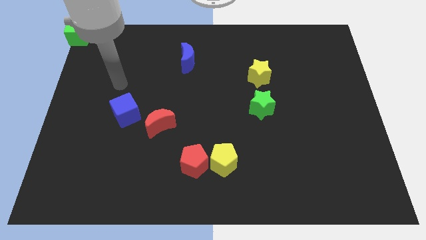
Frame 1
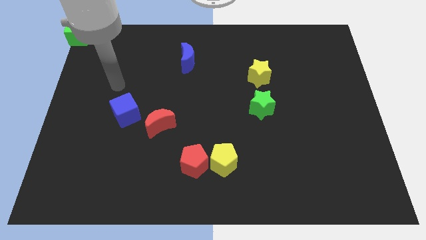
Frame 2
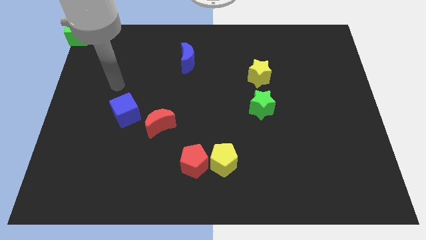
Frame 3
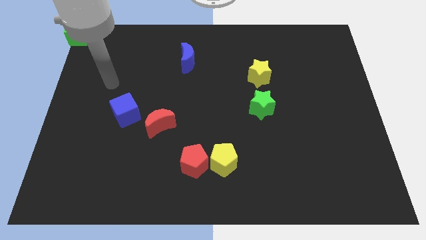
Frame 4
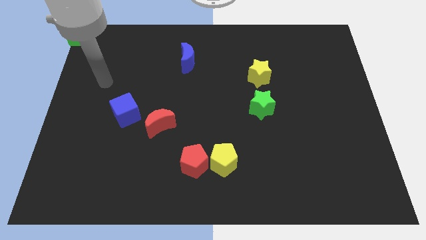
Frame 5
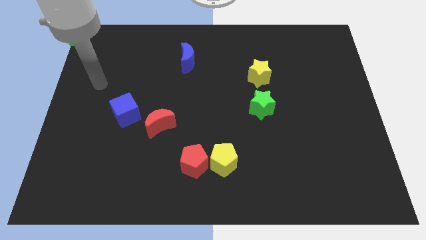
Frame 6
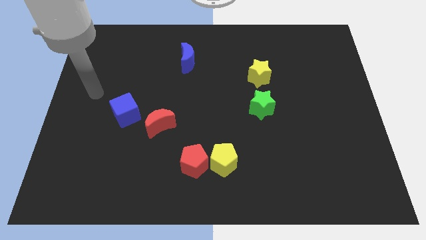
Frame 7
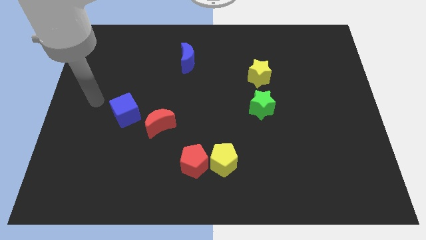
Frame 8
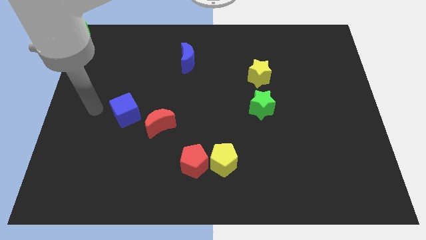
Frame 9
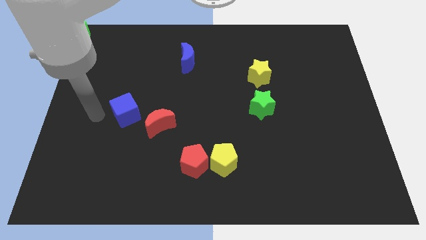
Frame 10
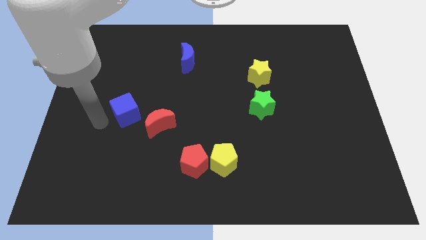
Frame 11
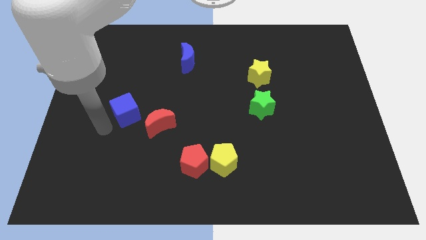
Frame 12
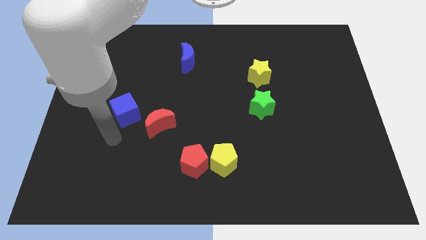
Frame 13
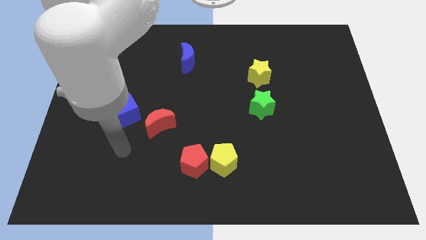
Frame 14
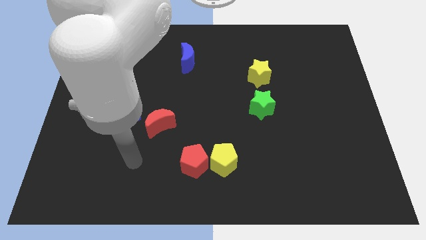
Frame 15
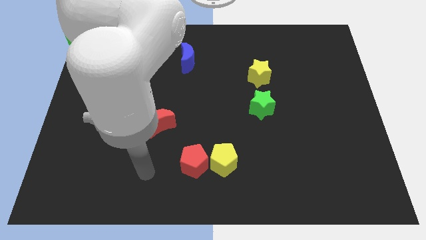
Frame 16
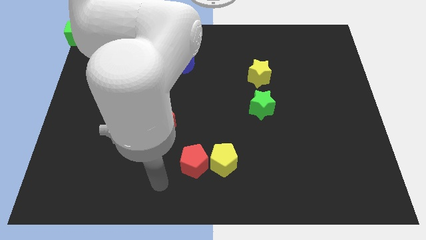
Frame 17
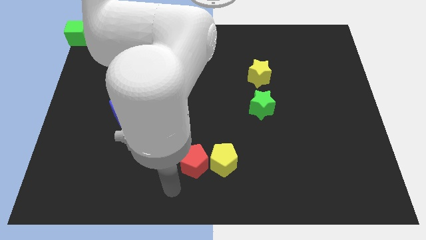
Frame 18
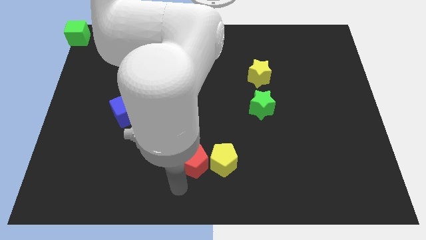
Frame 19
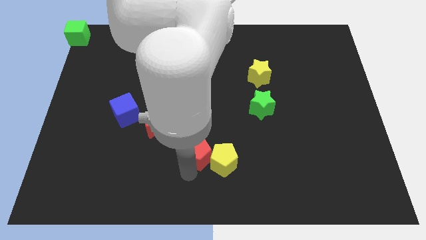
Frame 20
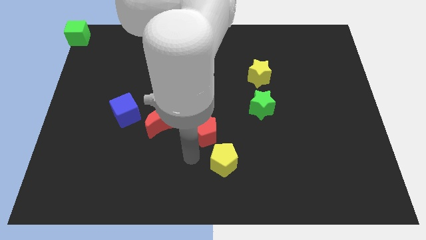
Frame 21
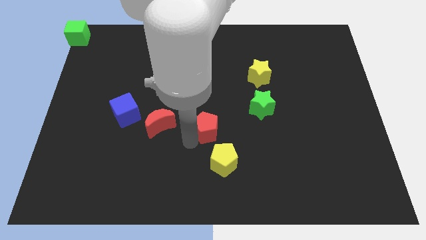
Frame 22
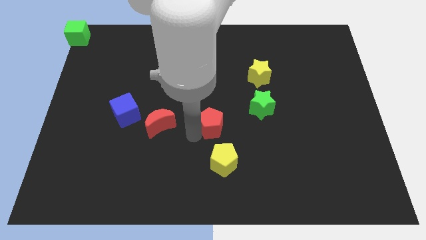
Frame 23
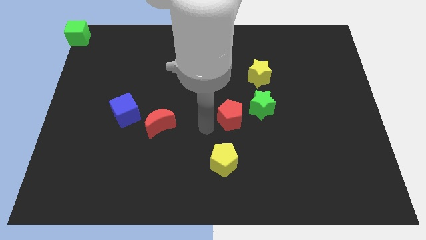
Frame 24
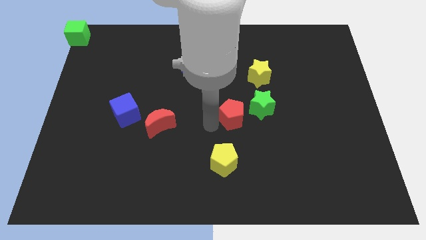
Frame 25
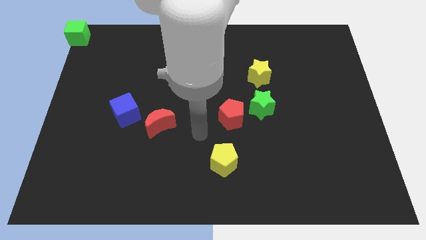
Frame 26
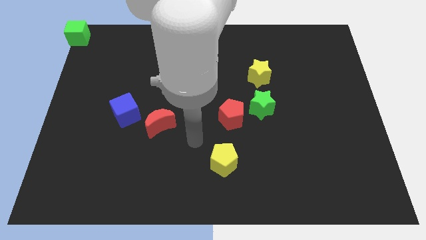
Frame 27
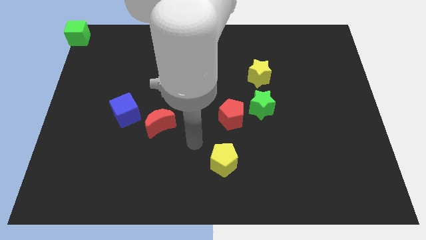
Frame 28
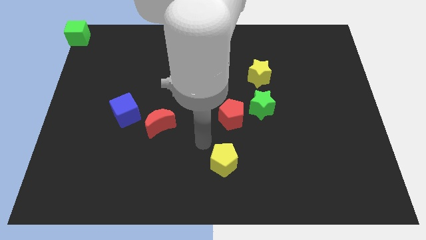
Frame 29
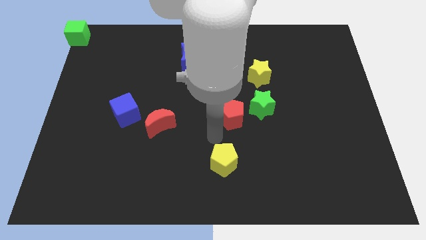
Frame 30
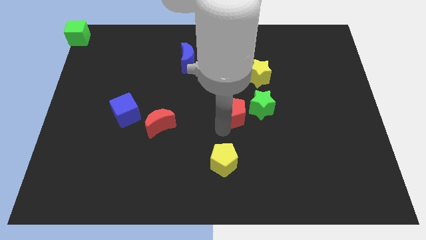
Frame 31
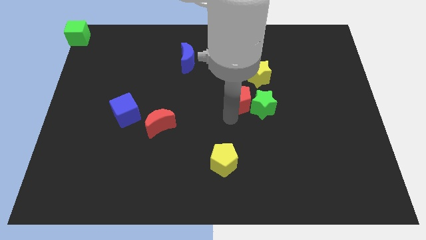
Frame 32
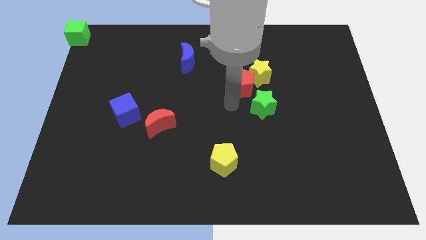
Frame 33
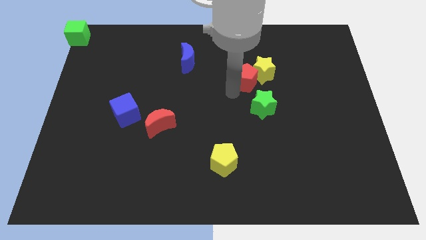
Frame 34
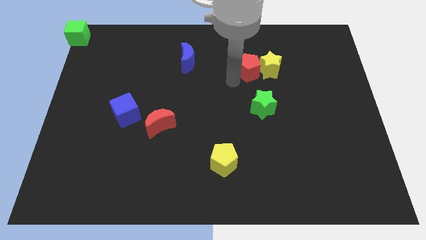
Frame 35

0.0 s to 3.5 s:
push red pentagon above green star

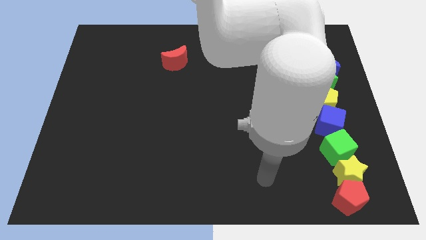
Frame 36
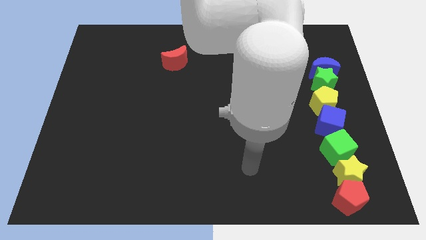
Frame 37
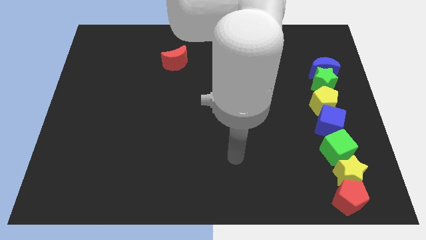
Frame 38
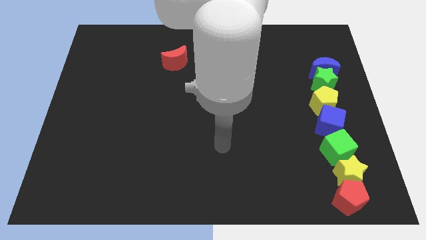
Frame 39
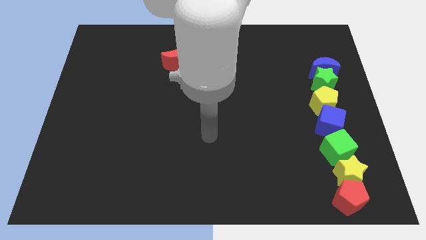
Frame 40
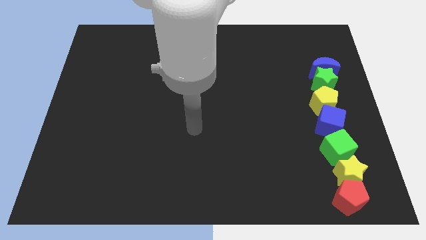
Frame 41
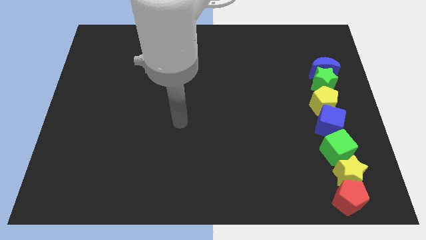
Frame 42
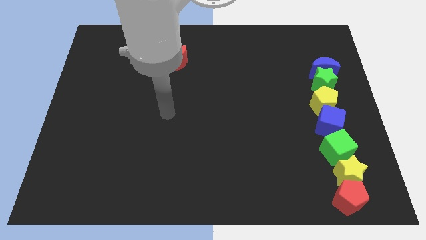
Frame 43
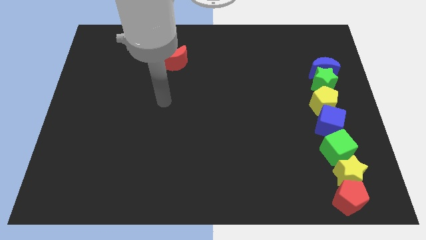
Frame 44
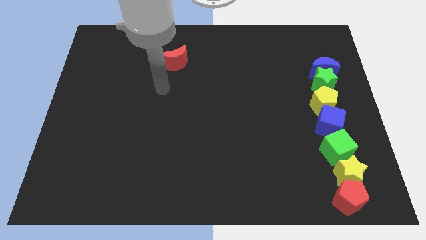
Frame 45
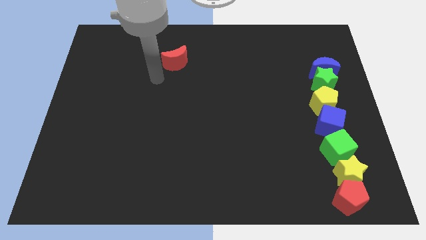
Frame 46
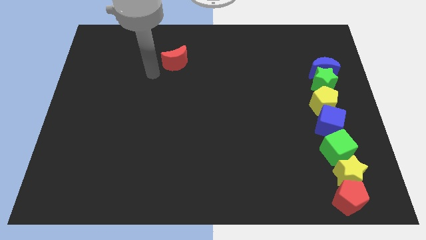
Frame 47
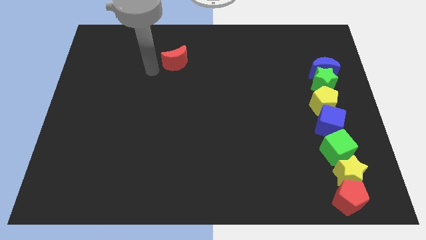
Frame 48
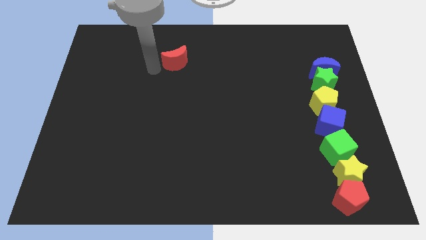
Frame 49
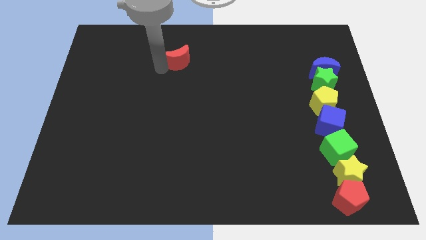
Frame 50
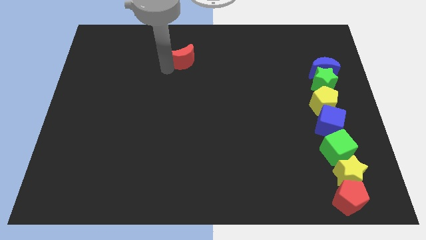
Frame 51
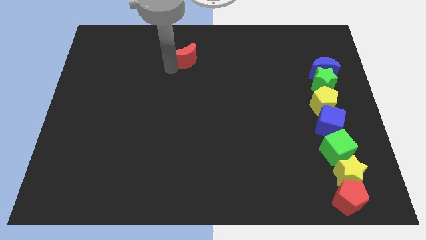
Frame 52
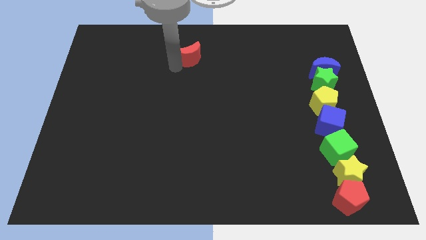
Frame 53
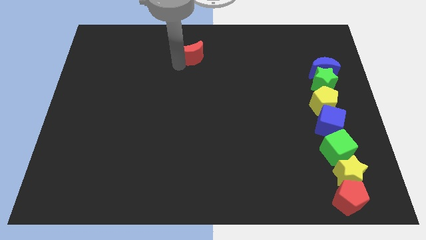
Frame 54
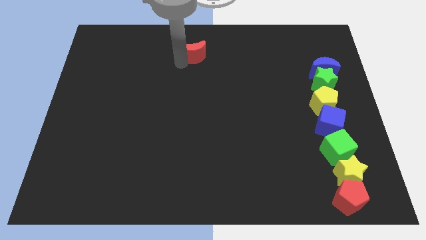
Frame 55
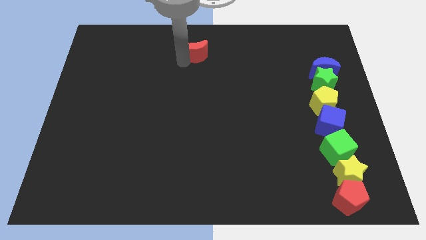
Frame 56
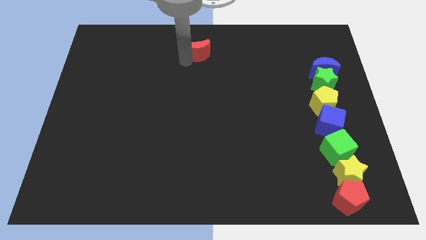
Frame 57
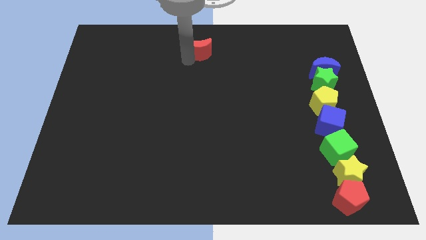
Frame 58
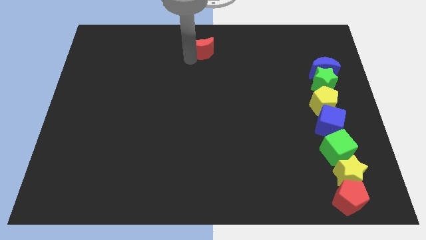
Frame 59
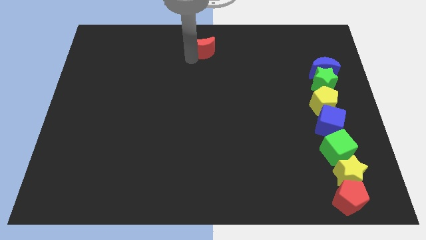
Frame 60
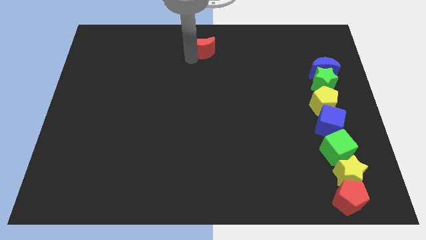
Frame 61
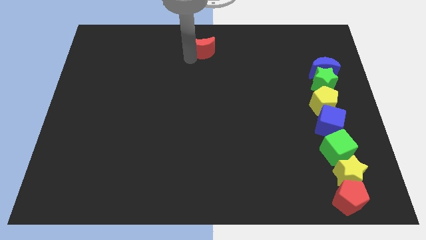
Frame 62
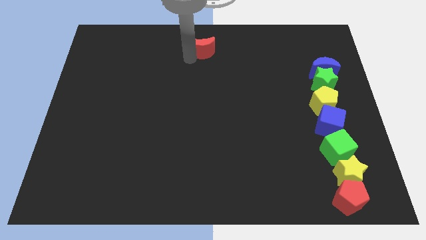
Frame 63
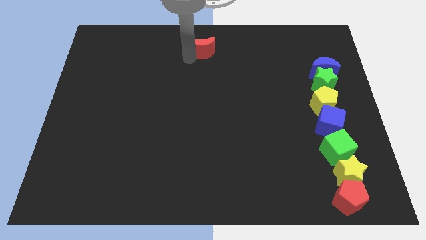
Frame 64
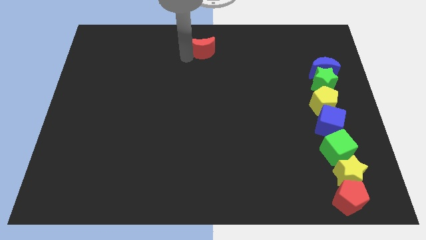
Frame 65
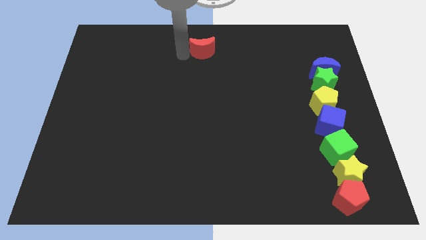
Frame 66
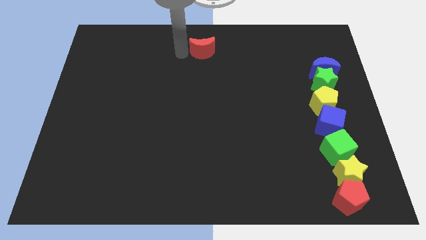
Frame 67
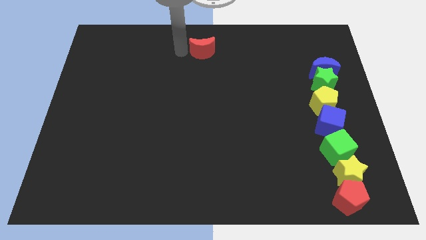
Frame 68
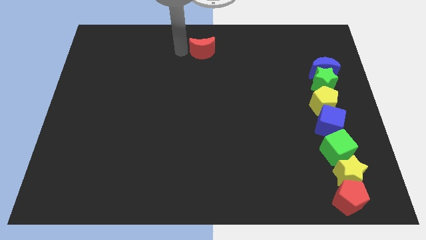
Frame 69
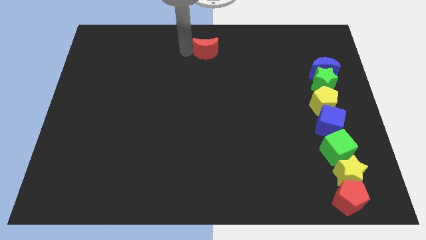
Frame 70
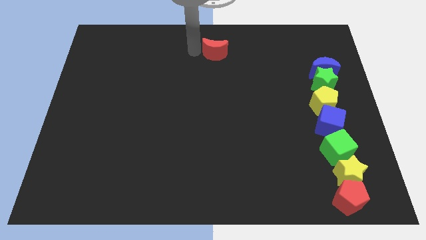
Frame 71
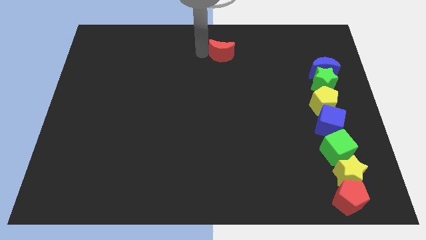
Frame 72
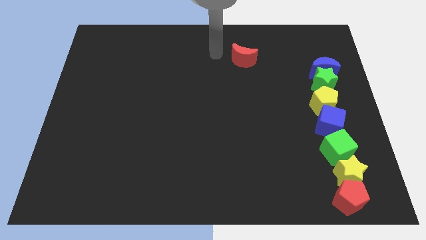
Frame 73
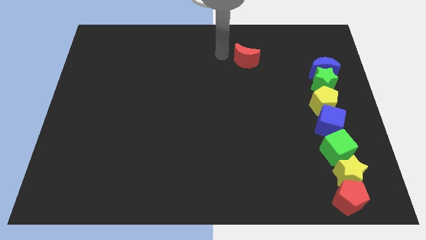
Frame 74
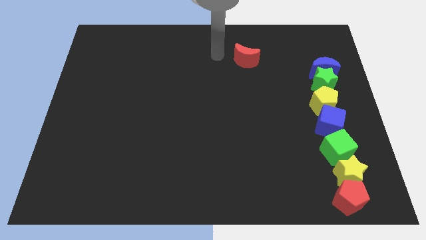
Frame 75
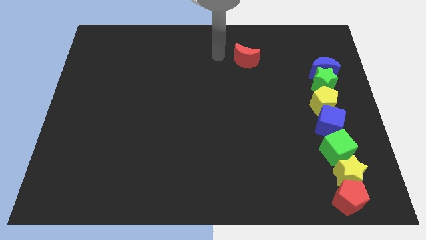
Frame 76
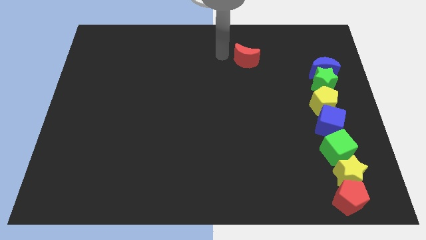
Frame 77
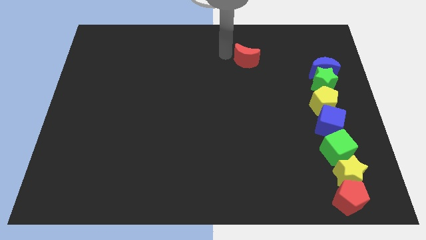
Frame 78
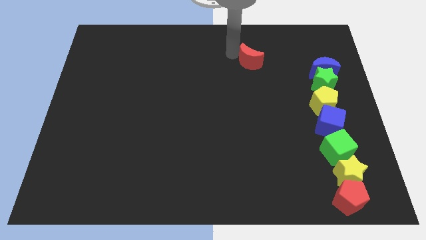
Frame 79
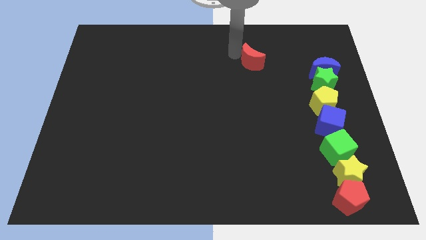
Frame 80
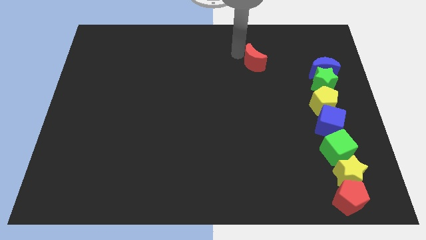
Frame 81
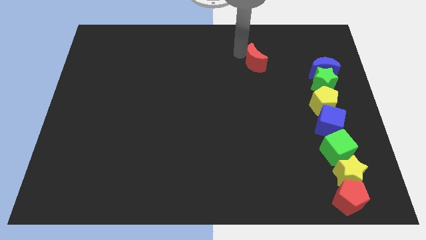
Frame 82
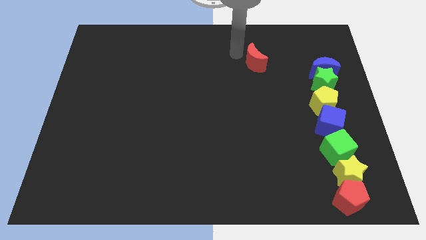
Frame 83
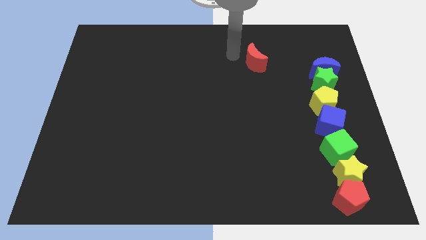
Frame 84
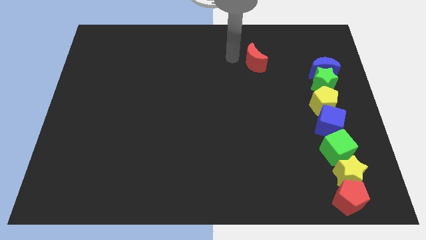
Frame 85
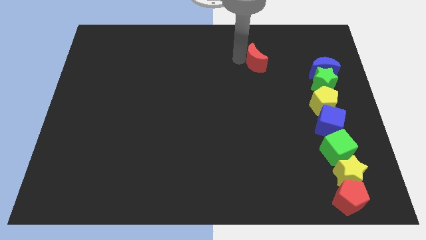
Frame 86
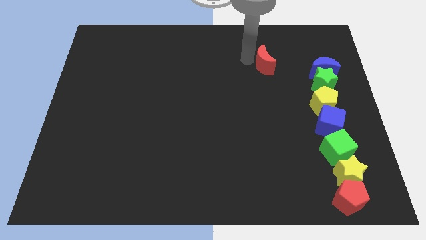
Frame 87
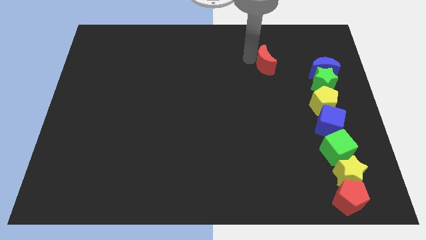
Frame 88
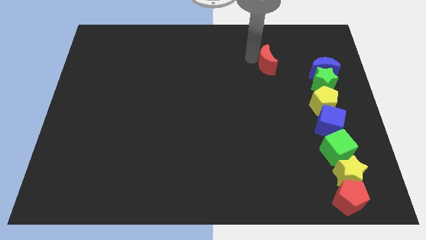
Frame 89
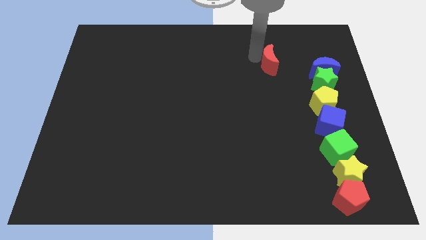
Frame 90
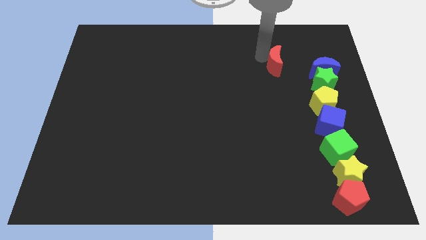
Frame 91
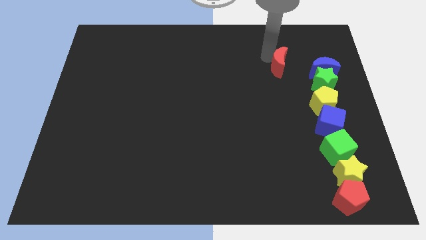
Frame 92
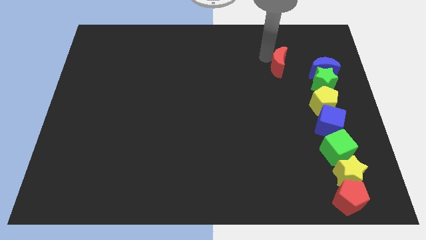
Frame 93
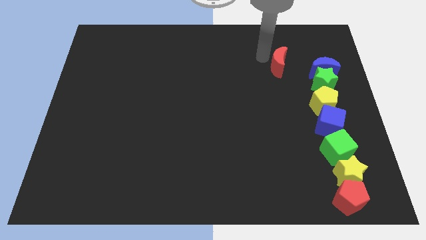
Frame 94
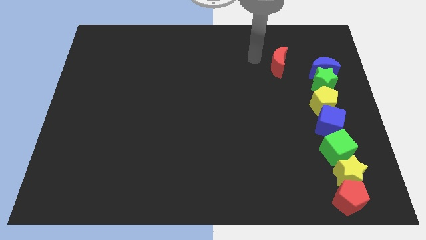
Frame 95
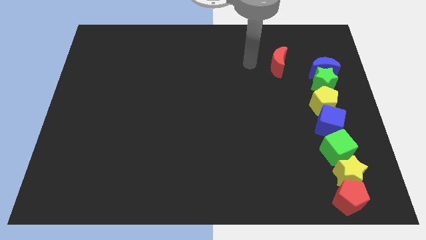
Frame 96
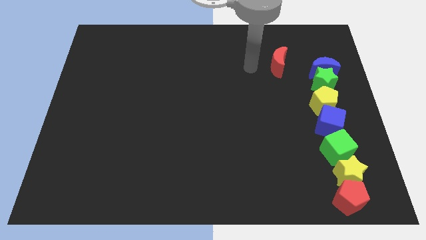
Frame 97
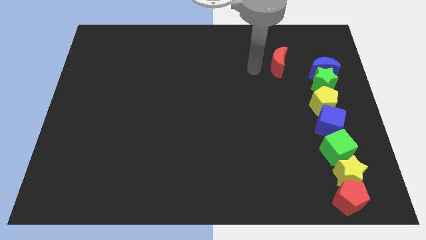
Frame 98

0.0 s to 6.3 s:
push the red crescent to the left of the blue crescent
